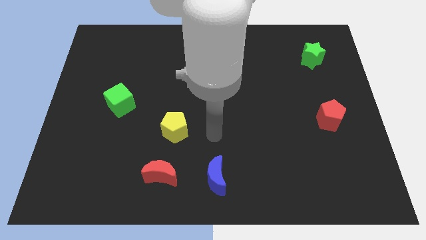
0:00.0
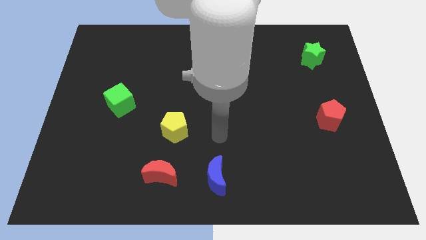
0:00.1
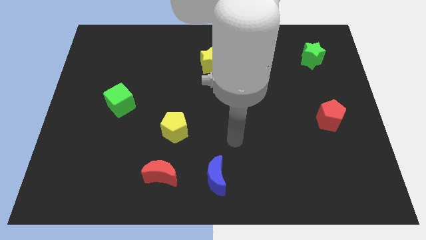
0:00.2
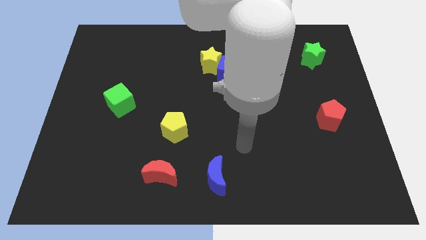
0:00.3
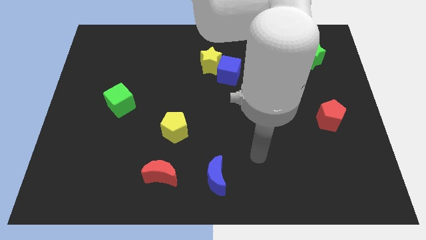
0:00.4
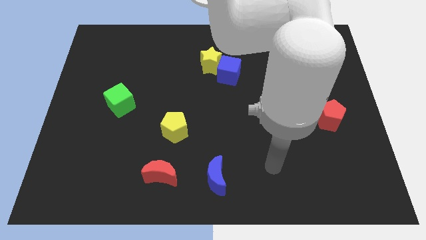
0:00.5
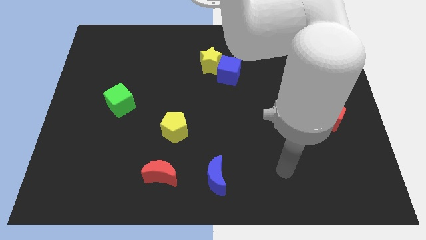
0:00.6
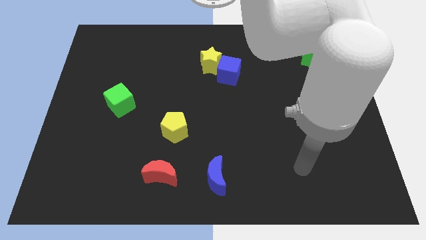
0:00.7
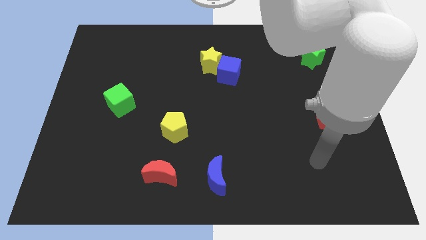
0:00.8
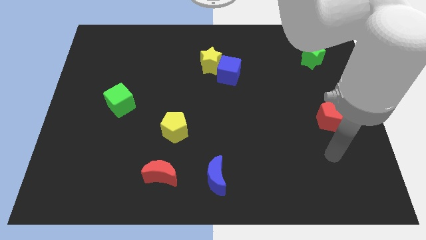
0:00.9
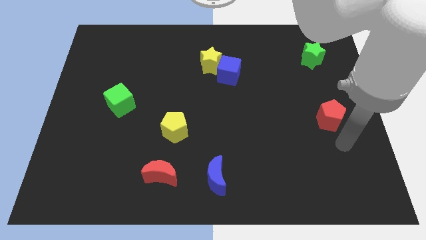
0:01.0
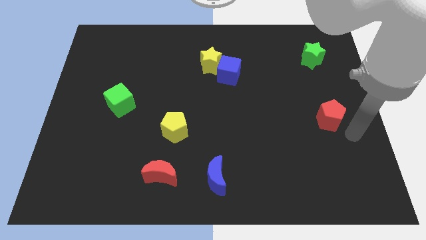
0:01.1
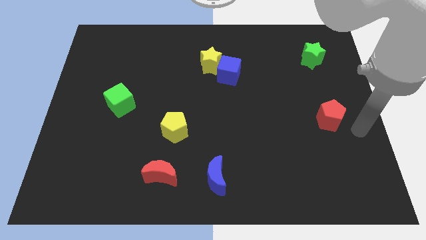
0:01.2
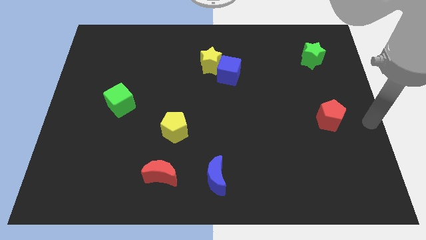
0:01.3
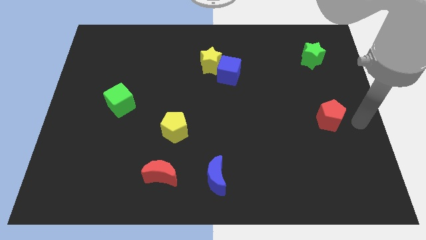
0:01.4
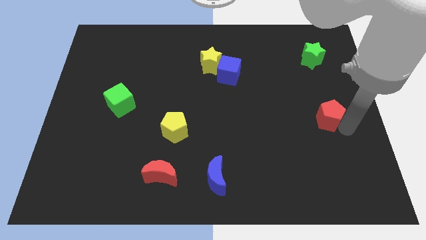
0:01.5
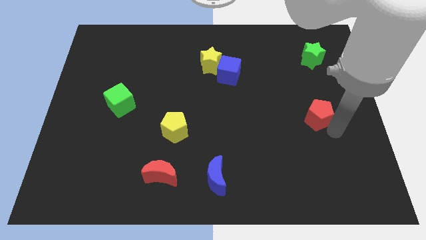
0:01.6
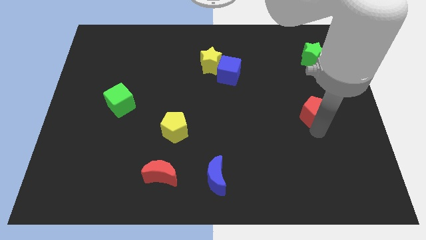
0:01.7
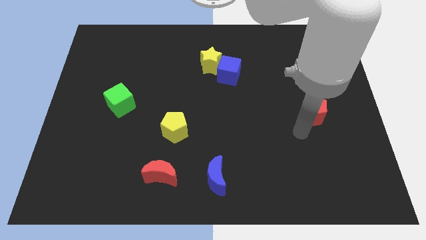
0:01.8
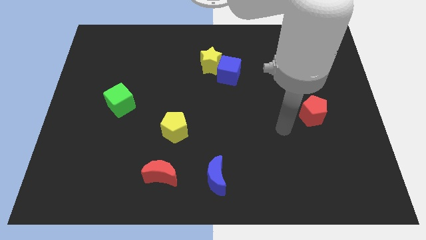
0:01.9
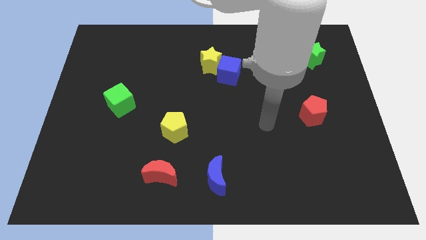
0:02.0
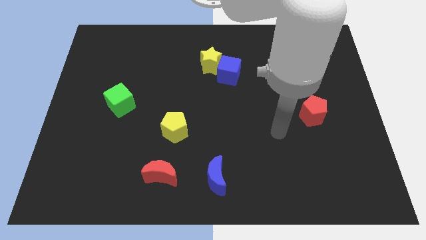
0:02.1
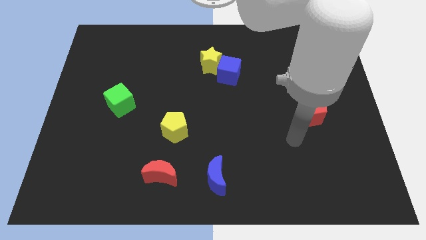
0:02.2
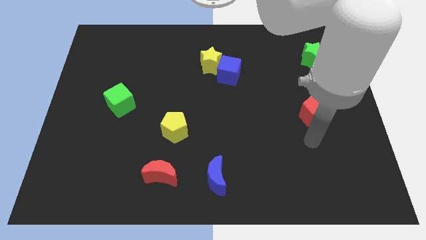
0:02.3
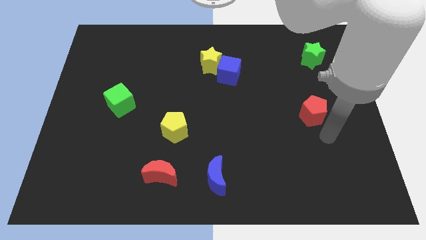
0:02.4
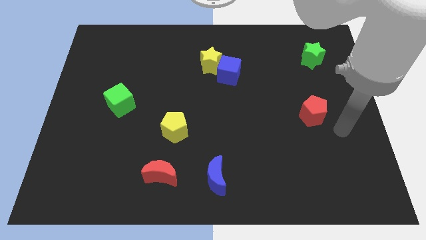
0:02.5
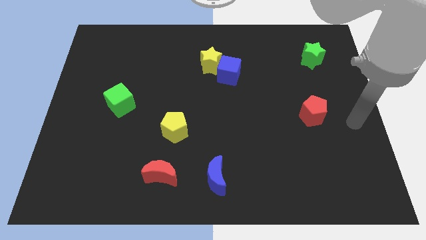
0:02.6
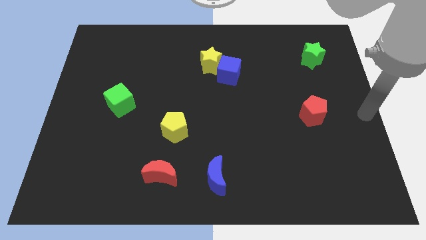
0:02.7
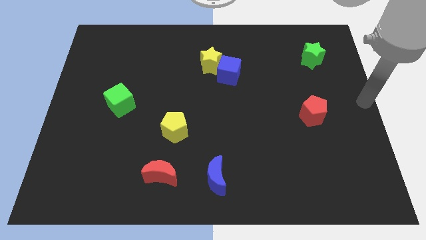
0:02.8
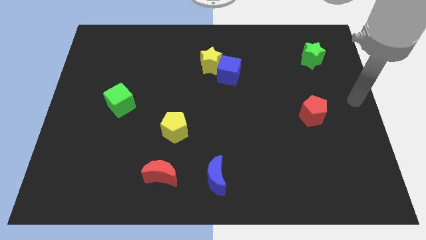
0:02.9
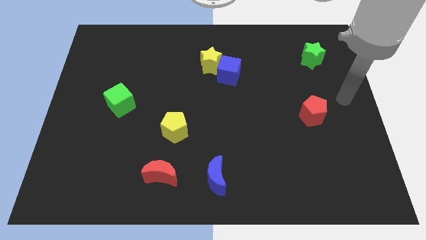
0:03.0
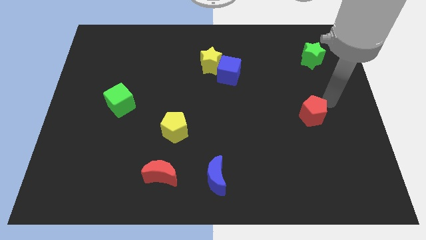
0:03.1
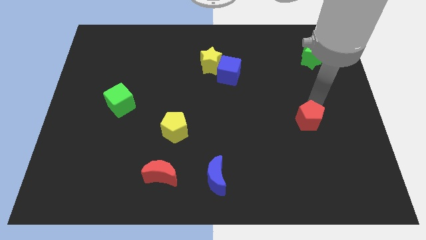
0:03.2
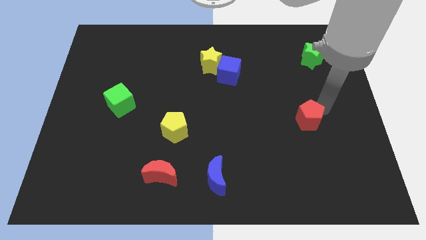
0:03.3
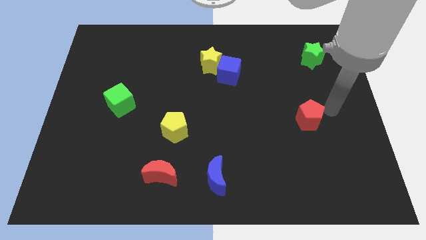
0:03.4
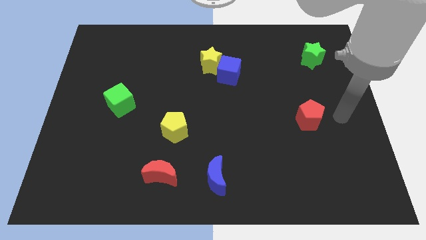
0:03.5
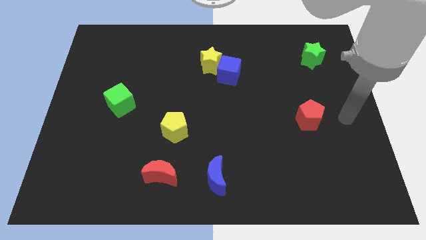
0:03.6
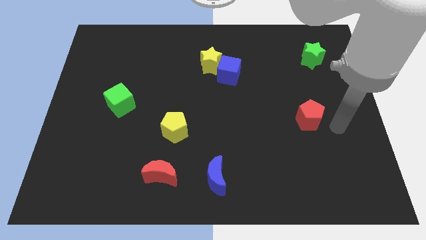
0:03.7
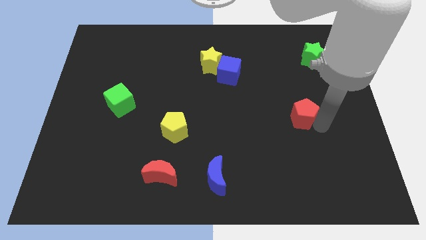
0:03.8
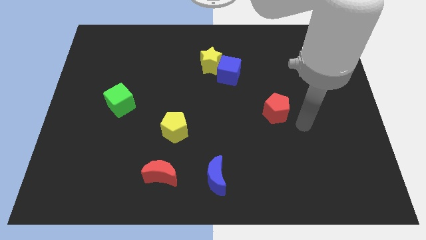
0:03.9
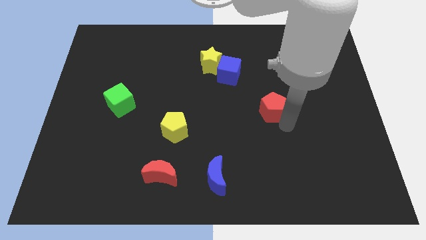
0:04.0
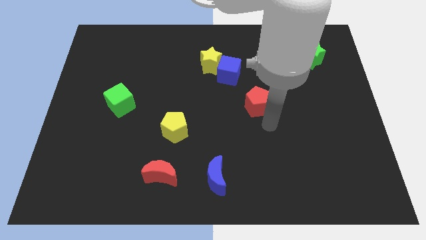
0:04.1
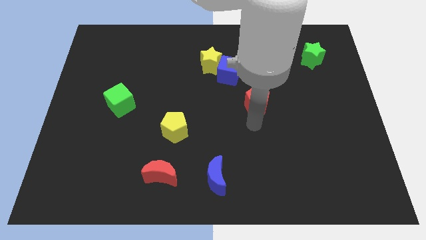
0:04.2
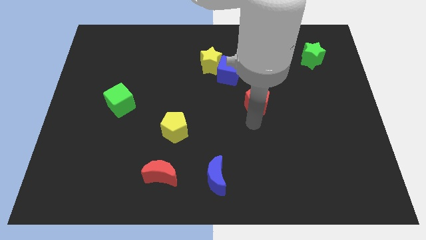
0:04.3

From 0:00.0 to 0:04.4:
move the red pentagon towards the blue cube

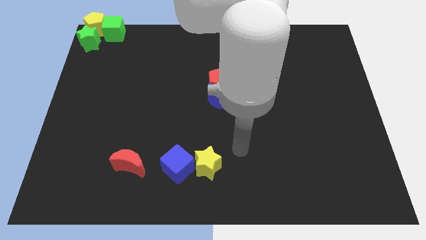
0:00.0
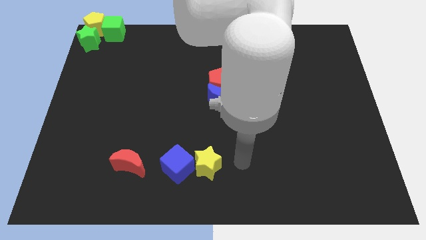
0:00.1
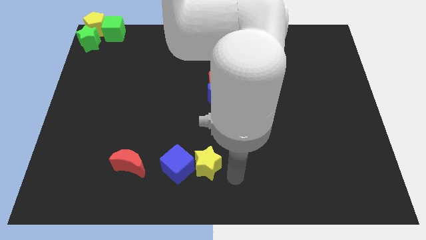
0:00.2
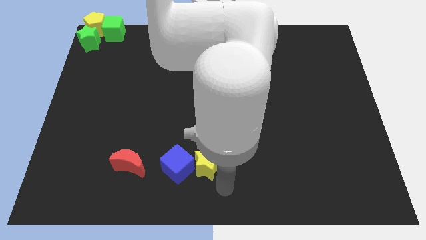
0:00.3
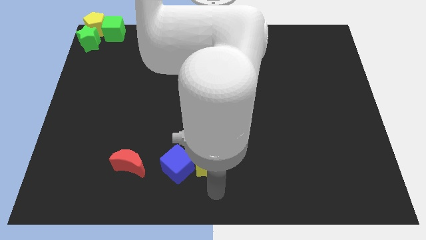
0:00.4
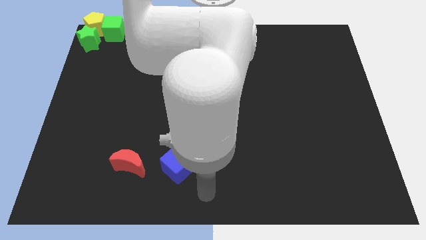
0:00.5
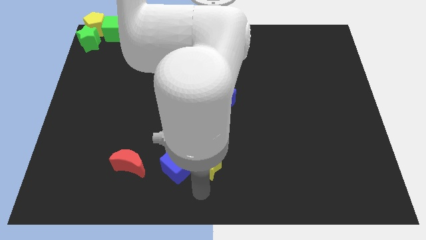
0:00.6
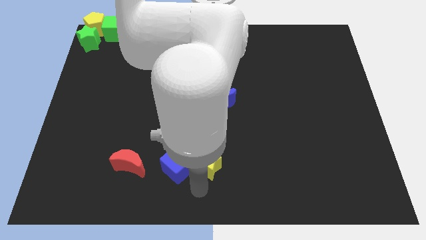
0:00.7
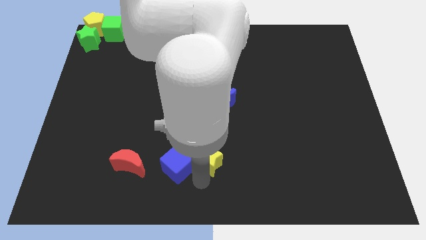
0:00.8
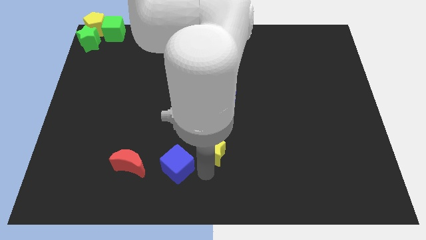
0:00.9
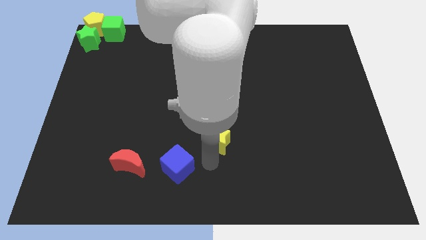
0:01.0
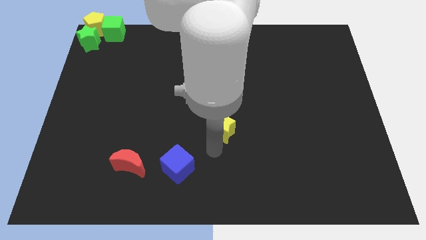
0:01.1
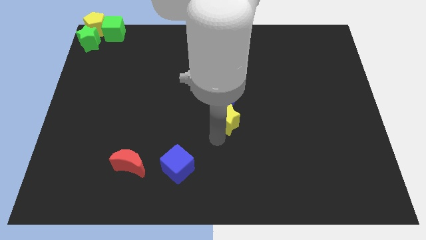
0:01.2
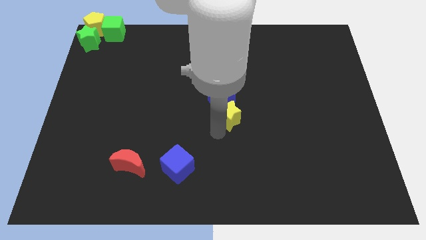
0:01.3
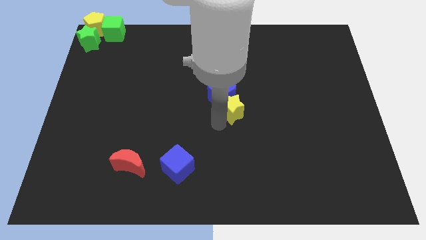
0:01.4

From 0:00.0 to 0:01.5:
push the yellow star below into blue moon

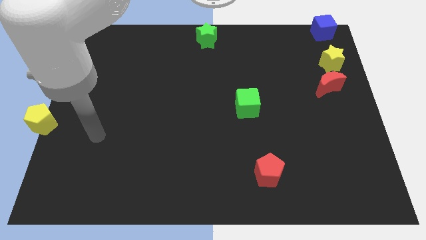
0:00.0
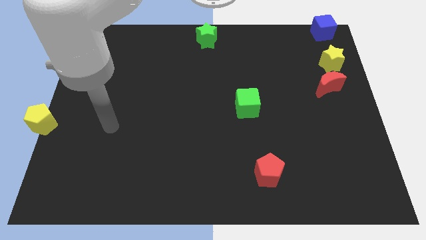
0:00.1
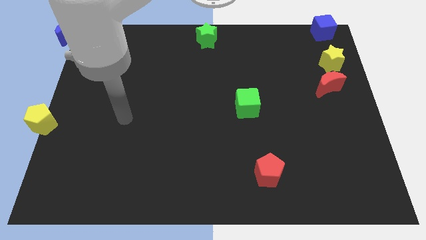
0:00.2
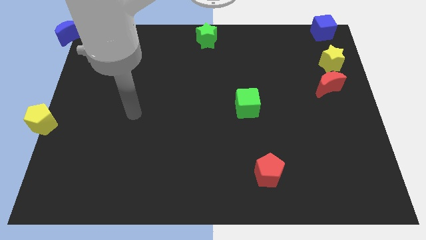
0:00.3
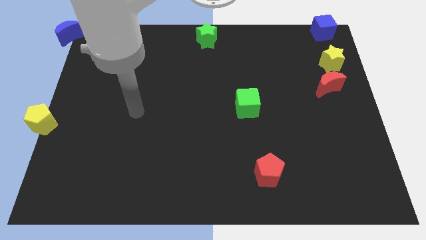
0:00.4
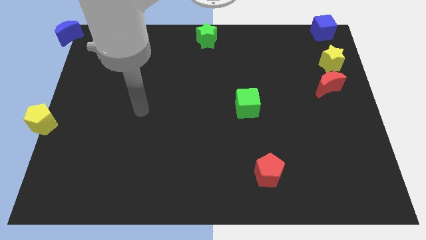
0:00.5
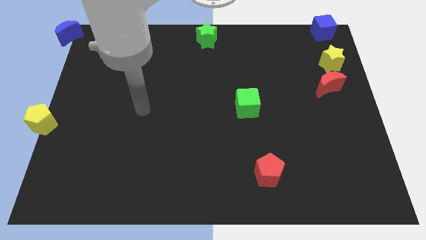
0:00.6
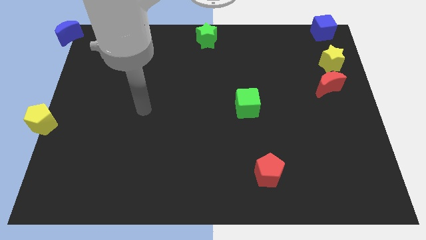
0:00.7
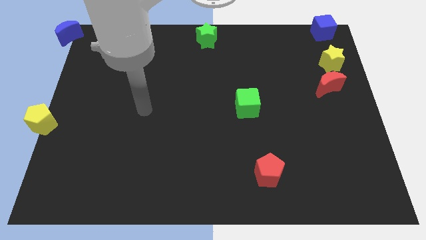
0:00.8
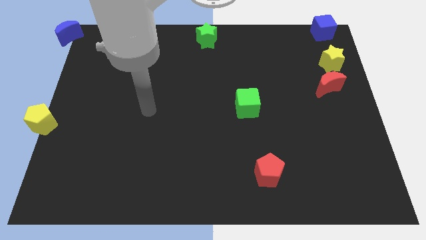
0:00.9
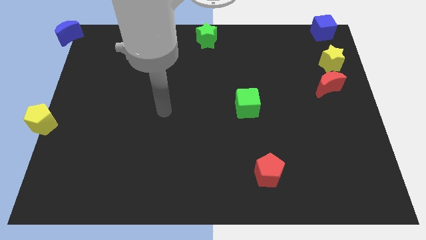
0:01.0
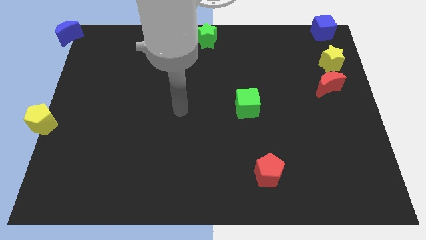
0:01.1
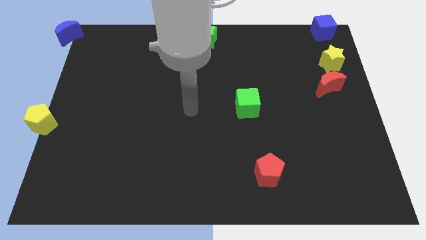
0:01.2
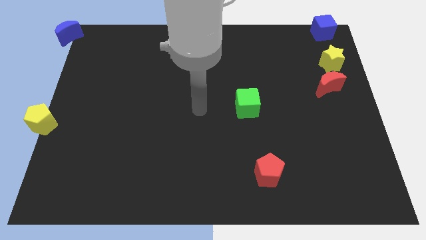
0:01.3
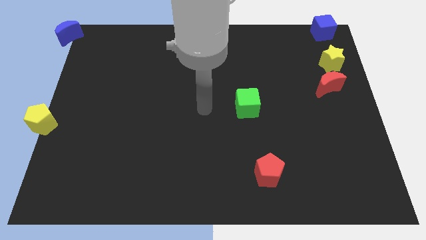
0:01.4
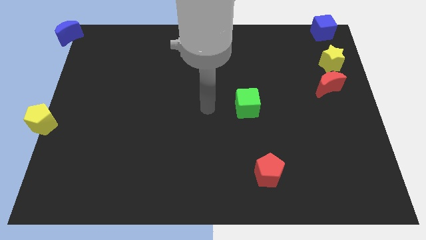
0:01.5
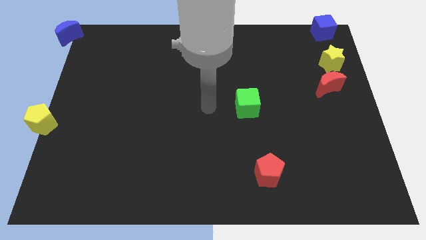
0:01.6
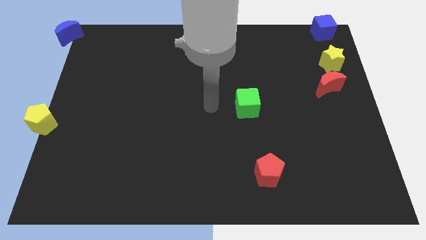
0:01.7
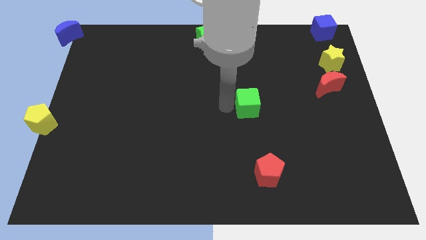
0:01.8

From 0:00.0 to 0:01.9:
point your arm to the left side of the green cube

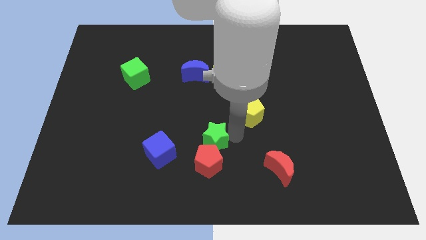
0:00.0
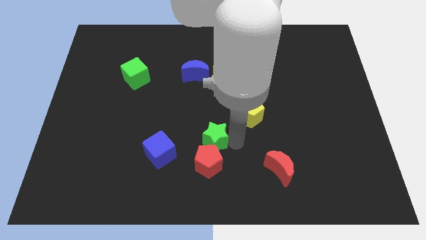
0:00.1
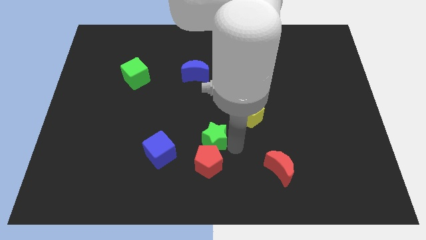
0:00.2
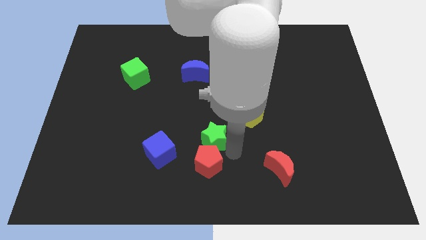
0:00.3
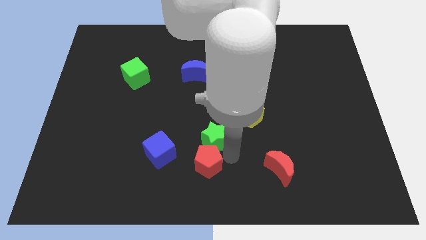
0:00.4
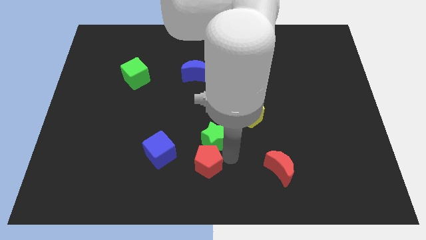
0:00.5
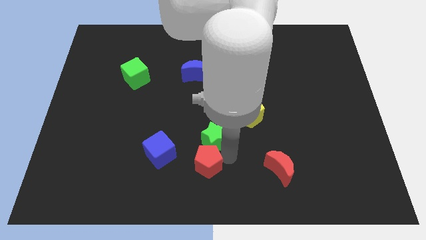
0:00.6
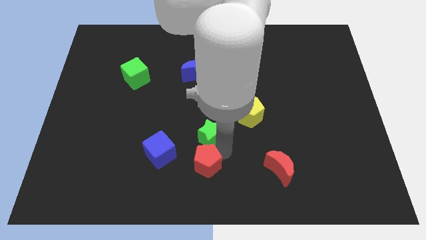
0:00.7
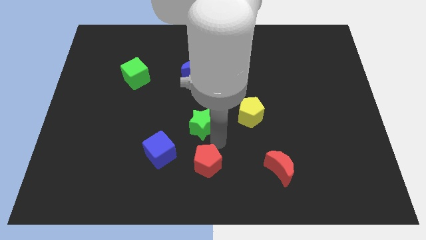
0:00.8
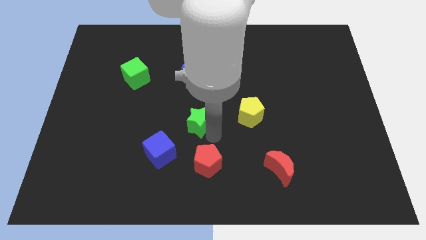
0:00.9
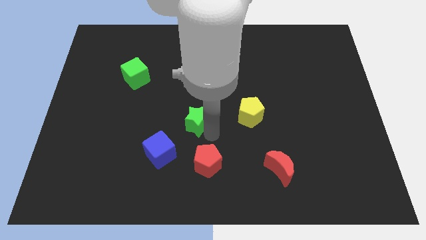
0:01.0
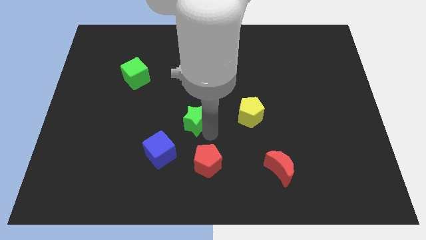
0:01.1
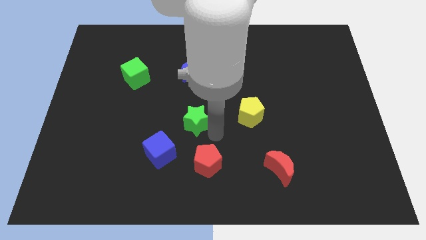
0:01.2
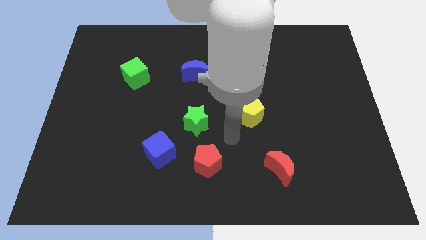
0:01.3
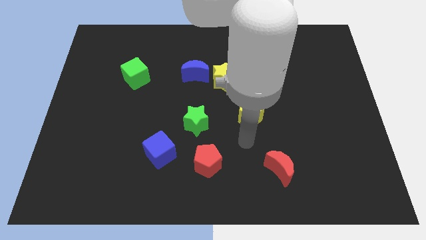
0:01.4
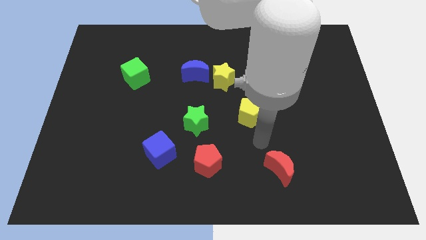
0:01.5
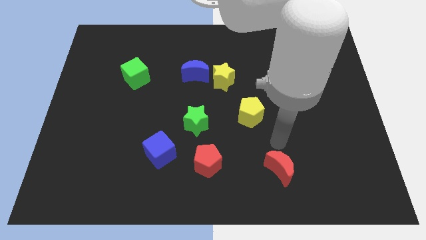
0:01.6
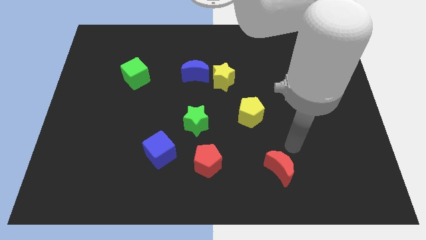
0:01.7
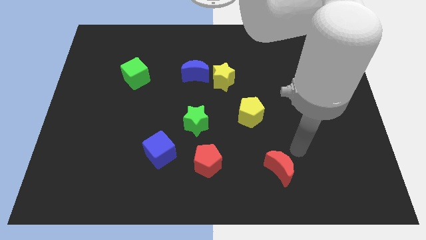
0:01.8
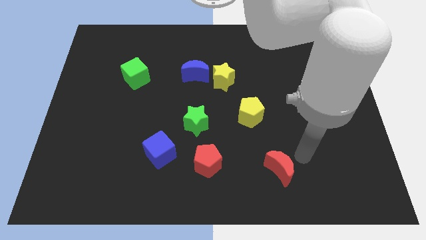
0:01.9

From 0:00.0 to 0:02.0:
separate the green star from the red pentagon
